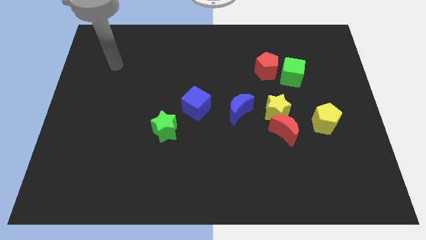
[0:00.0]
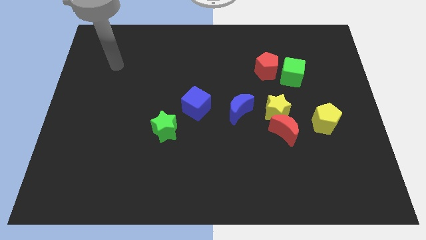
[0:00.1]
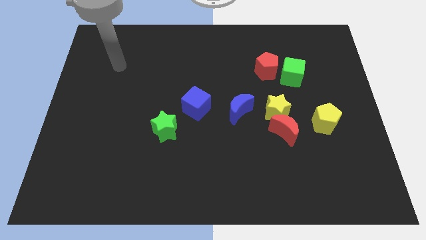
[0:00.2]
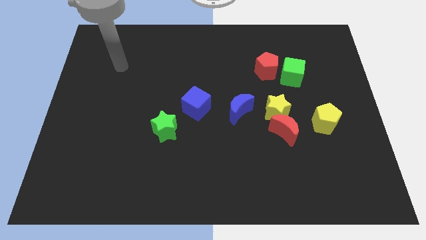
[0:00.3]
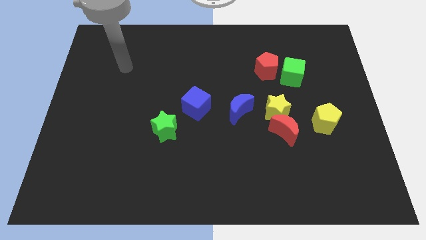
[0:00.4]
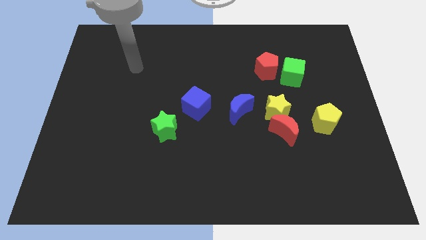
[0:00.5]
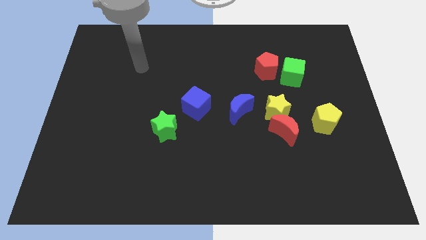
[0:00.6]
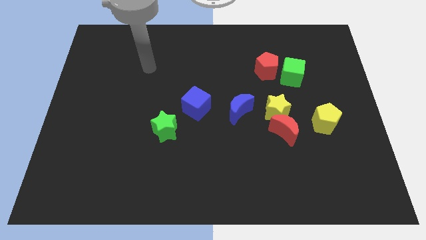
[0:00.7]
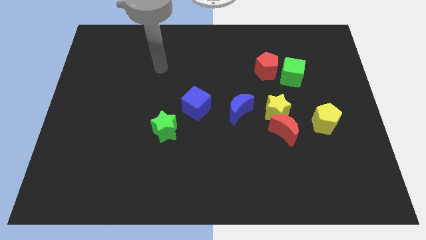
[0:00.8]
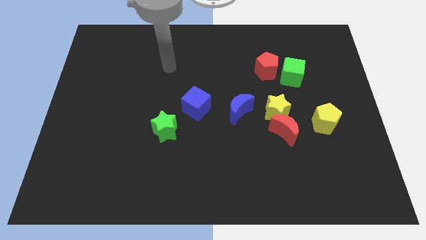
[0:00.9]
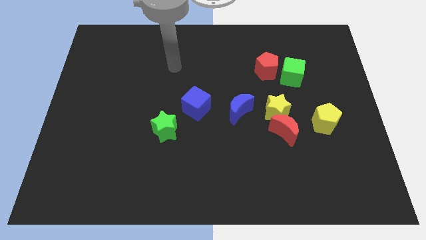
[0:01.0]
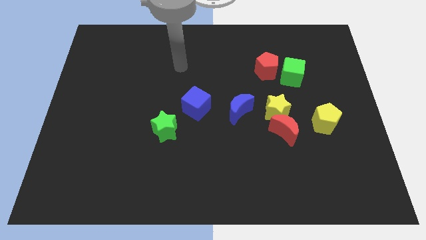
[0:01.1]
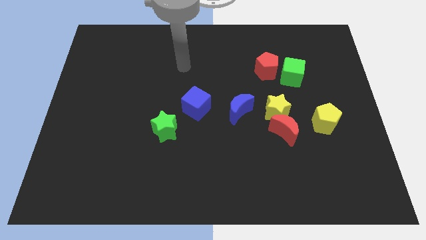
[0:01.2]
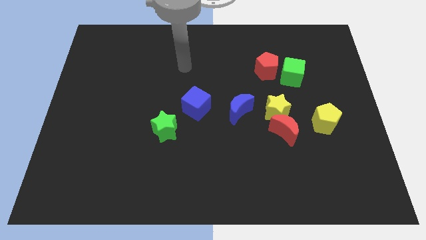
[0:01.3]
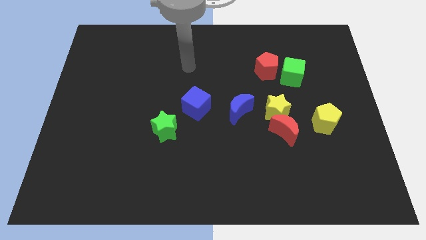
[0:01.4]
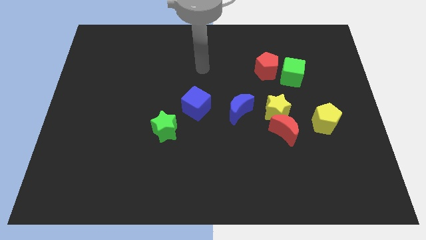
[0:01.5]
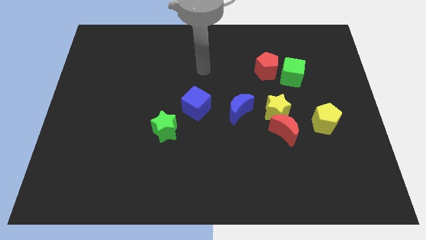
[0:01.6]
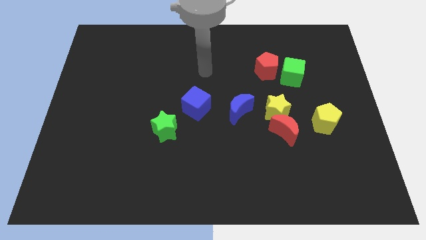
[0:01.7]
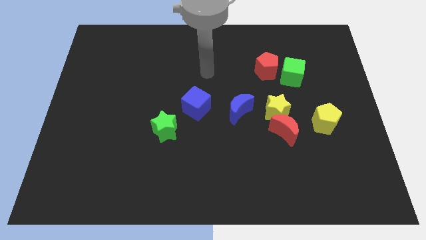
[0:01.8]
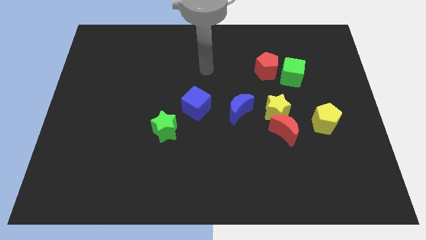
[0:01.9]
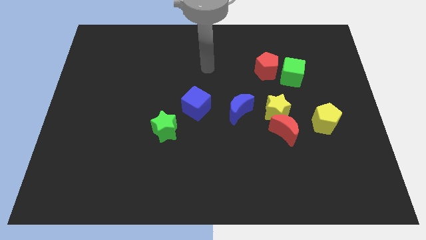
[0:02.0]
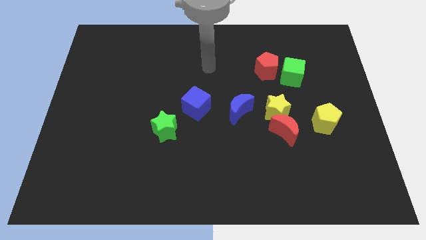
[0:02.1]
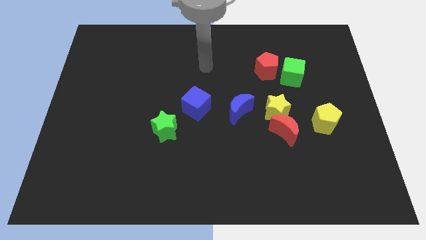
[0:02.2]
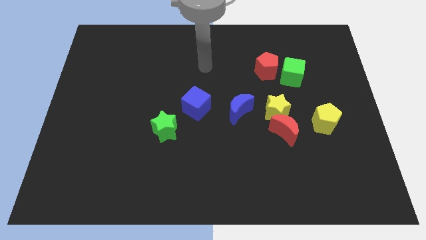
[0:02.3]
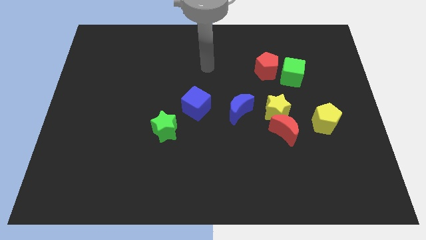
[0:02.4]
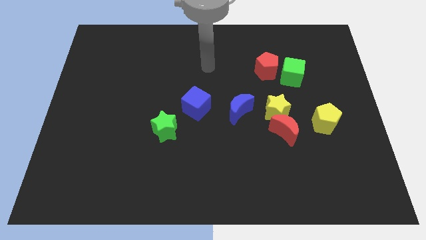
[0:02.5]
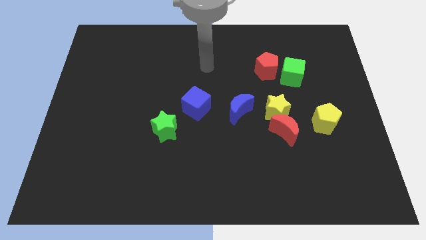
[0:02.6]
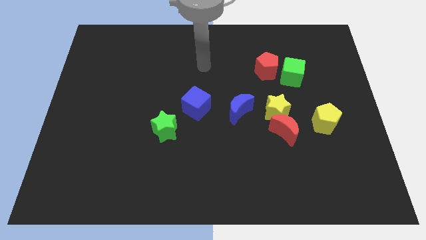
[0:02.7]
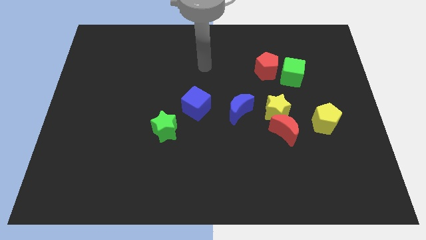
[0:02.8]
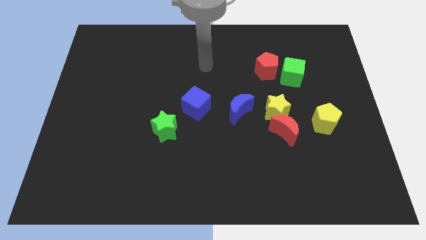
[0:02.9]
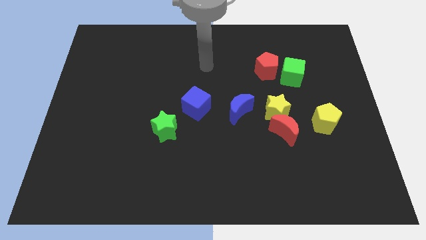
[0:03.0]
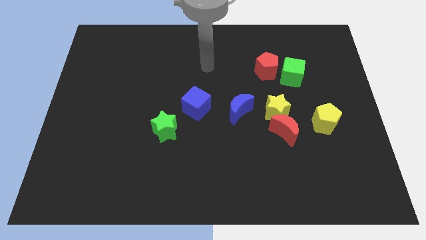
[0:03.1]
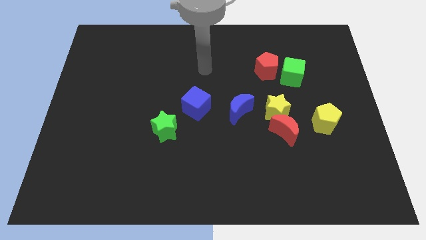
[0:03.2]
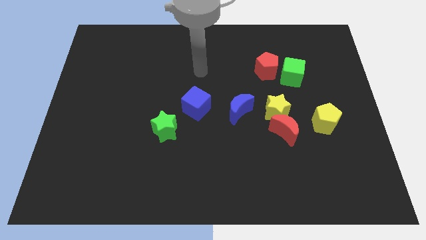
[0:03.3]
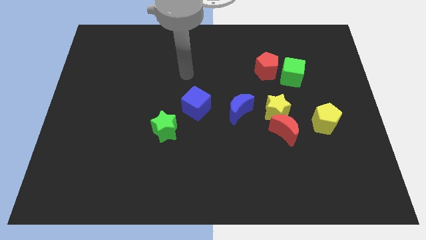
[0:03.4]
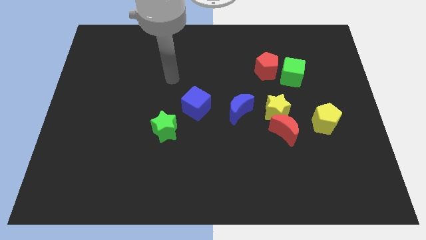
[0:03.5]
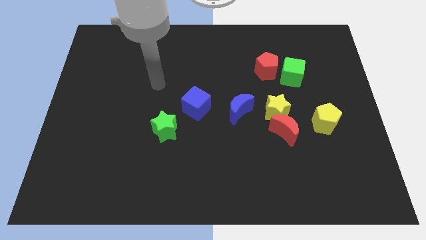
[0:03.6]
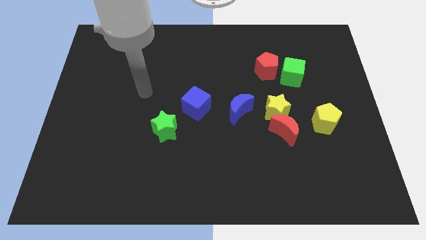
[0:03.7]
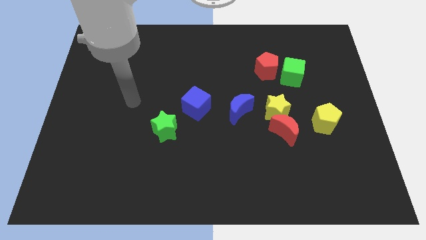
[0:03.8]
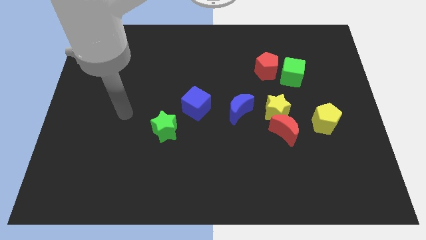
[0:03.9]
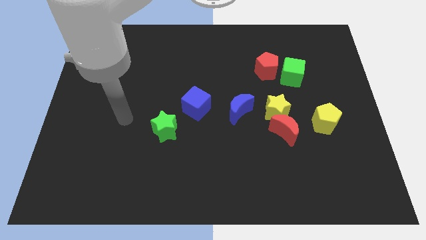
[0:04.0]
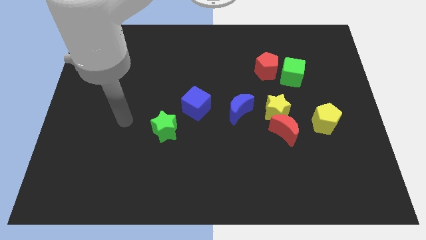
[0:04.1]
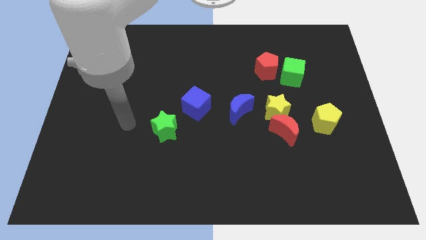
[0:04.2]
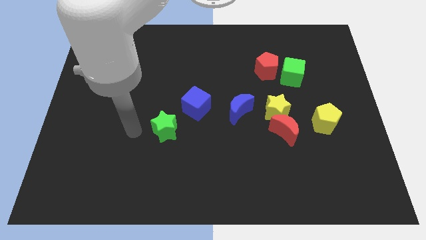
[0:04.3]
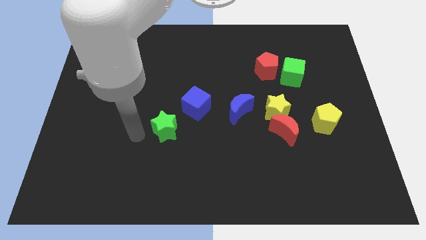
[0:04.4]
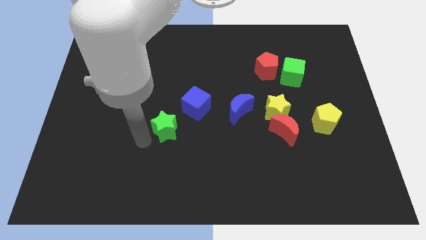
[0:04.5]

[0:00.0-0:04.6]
move the arm close to the green star

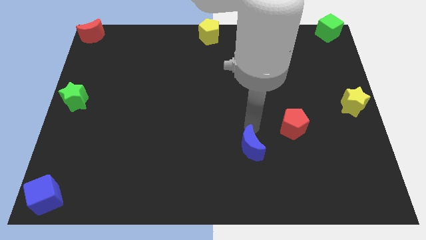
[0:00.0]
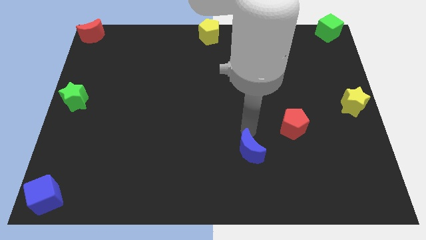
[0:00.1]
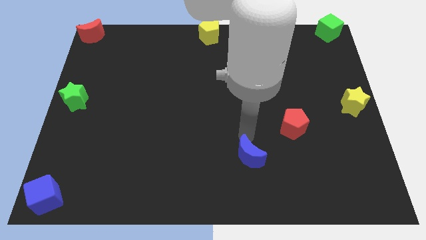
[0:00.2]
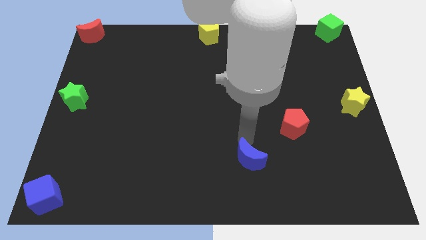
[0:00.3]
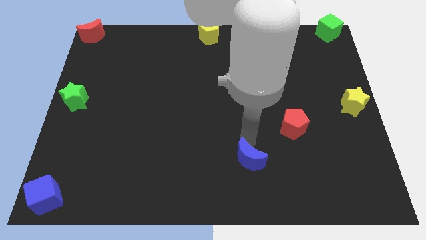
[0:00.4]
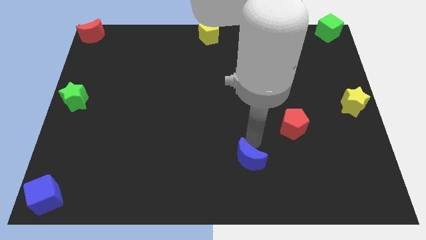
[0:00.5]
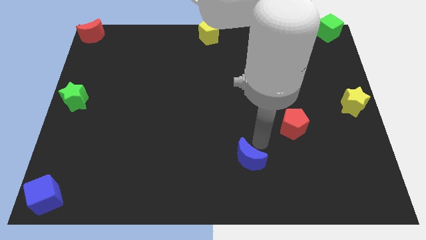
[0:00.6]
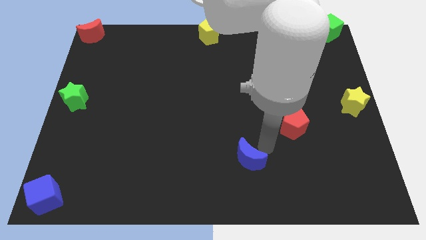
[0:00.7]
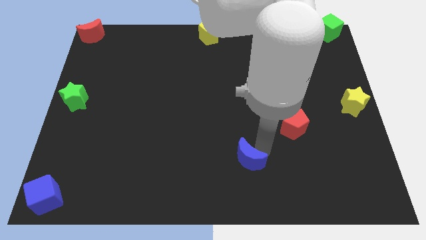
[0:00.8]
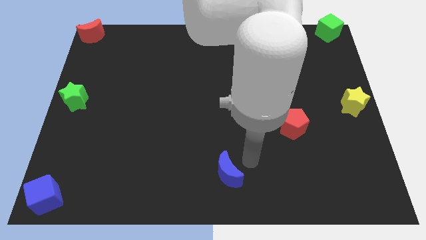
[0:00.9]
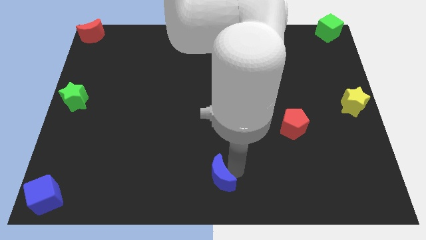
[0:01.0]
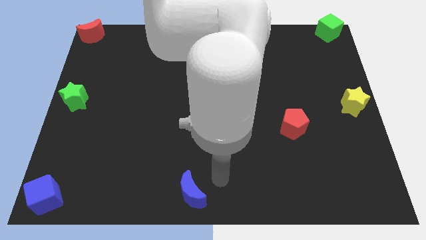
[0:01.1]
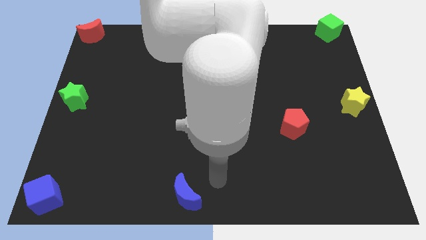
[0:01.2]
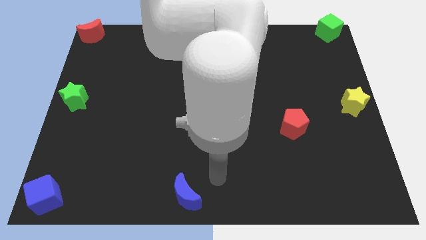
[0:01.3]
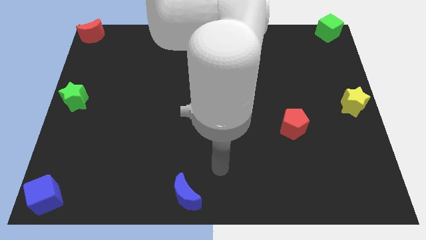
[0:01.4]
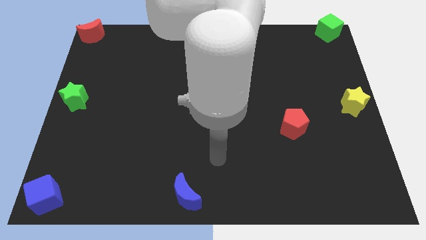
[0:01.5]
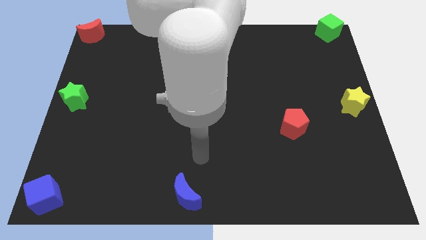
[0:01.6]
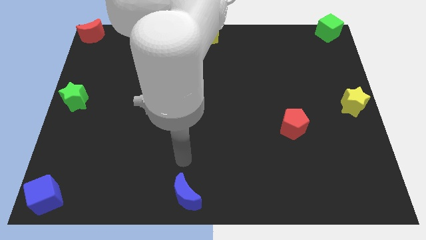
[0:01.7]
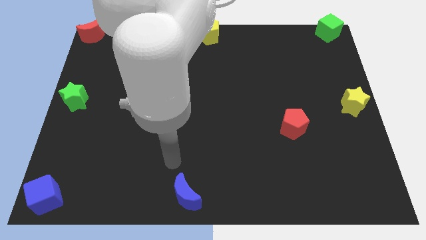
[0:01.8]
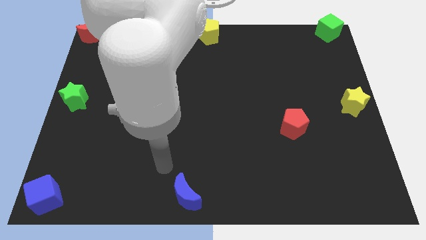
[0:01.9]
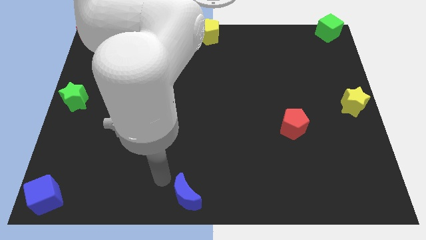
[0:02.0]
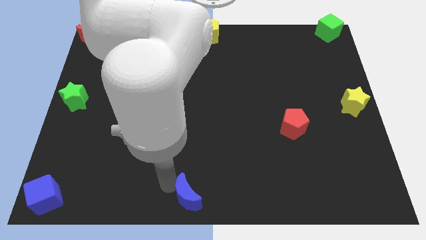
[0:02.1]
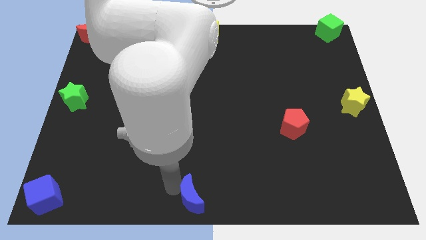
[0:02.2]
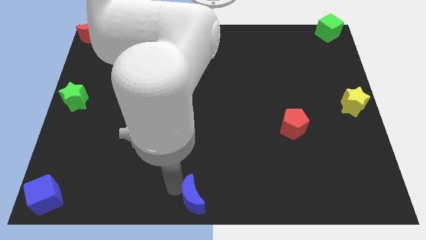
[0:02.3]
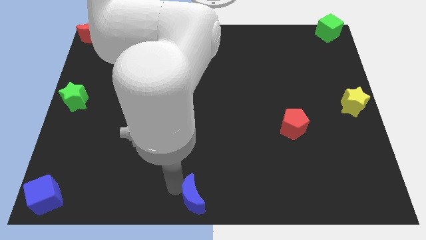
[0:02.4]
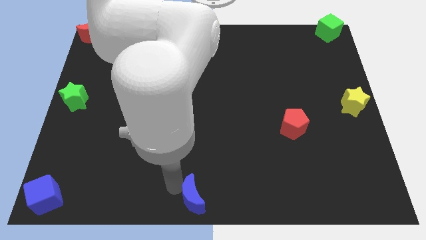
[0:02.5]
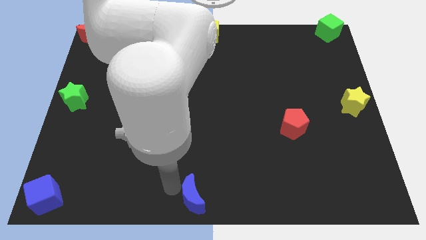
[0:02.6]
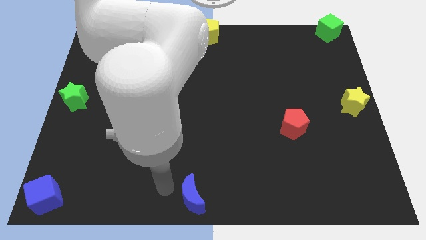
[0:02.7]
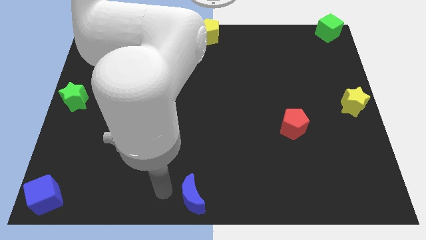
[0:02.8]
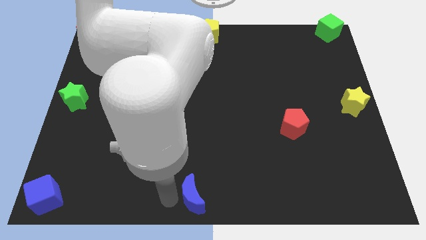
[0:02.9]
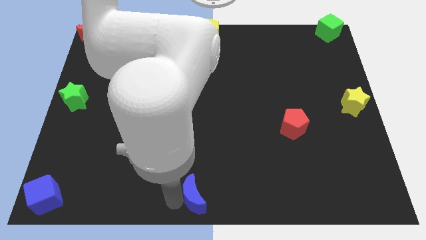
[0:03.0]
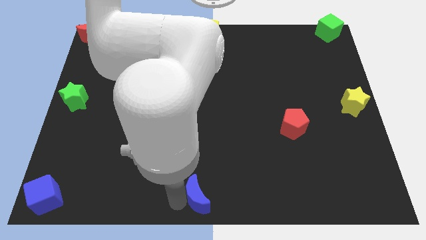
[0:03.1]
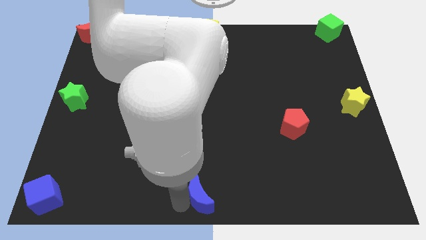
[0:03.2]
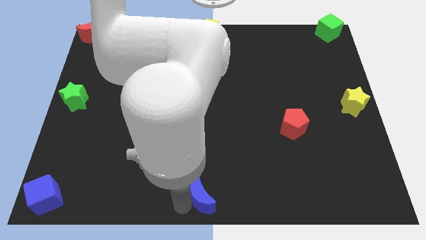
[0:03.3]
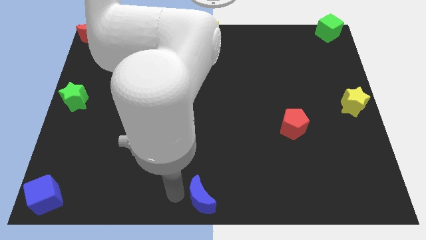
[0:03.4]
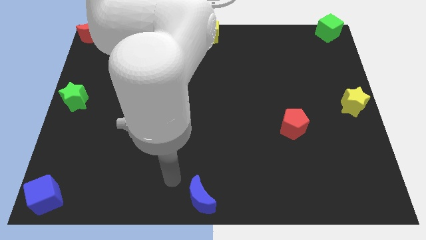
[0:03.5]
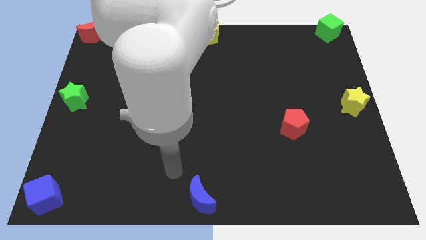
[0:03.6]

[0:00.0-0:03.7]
push the blue crescent to the bottom center of the board

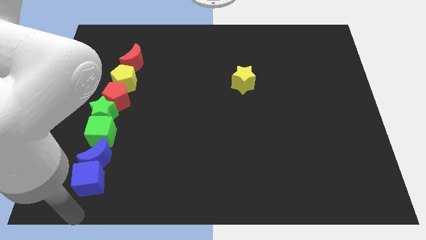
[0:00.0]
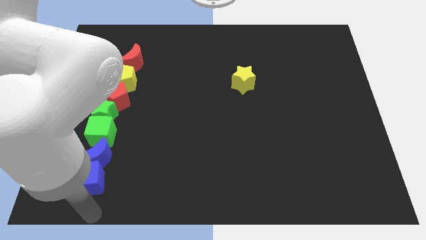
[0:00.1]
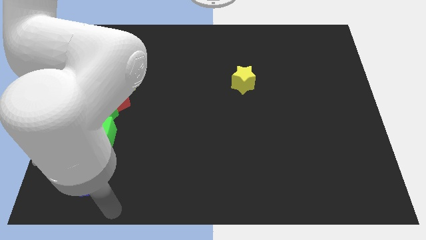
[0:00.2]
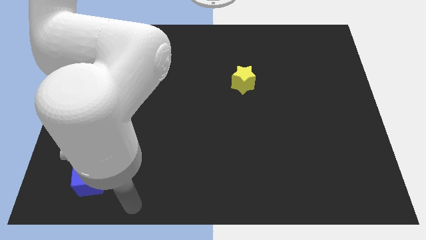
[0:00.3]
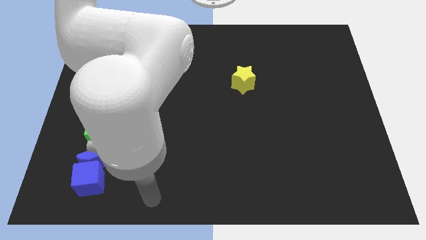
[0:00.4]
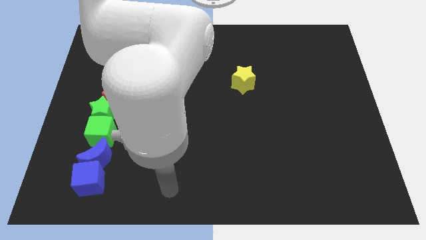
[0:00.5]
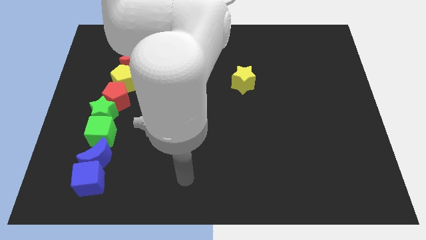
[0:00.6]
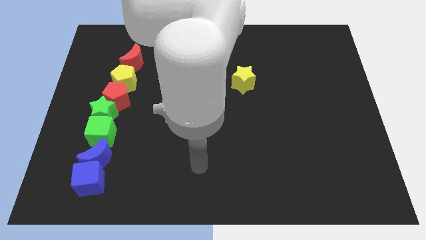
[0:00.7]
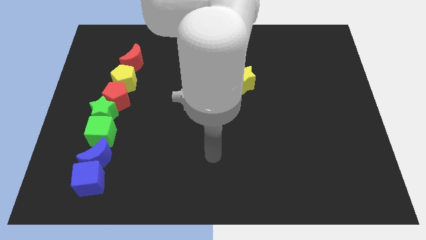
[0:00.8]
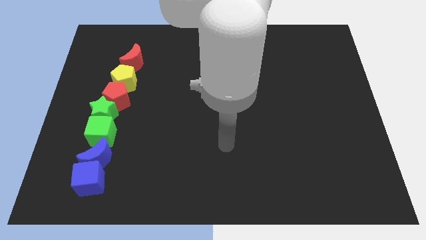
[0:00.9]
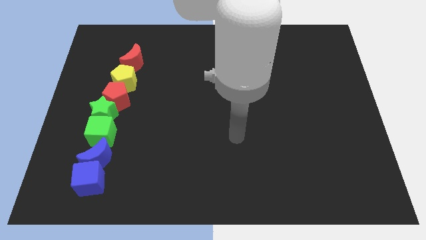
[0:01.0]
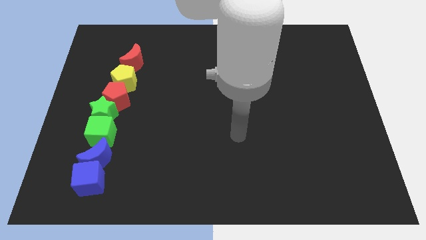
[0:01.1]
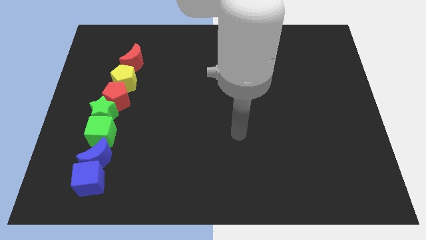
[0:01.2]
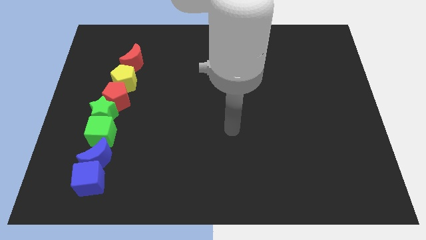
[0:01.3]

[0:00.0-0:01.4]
move the arm away from the blue cube
